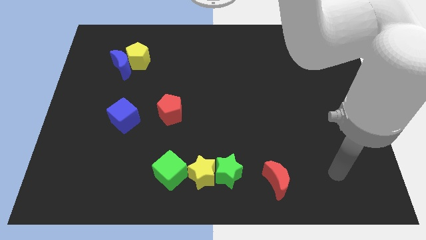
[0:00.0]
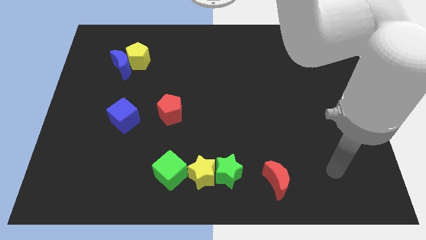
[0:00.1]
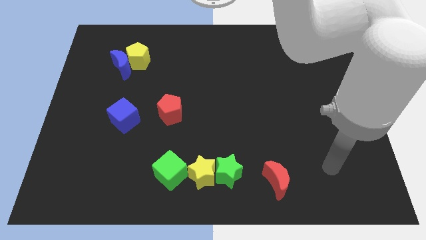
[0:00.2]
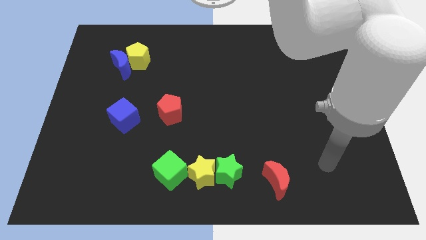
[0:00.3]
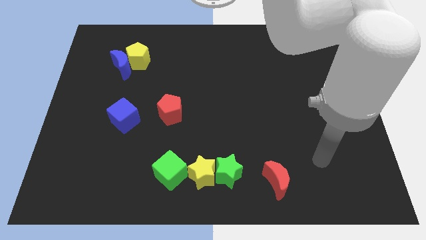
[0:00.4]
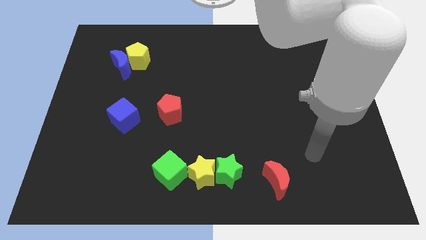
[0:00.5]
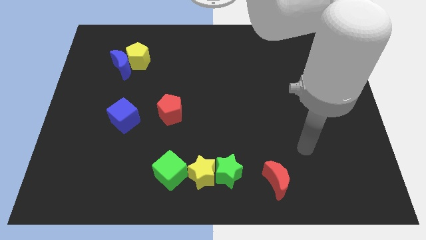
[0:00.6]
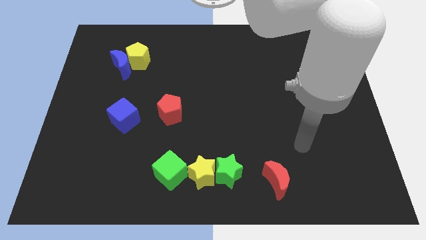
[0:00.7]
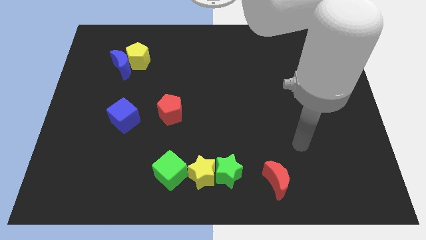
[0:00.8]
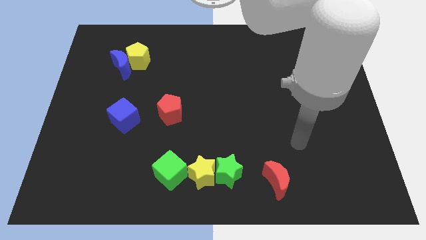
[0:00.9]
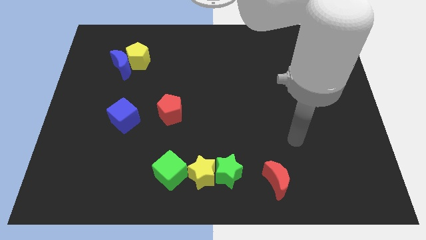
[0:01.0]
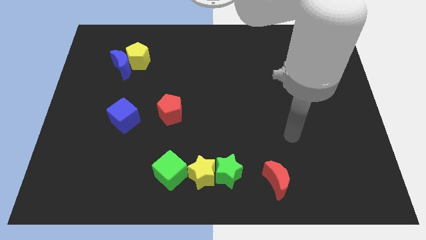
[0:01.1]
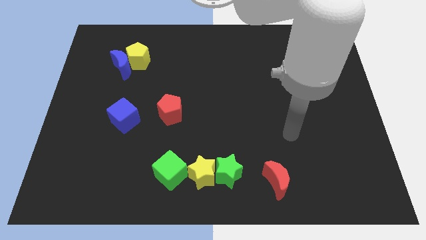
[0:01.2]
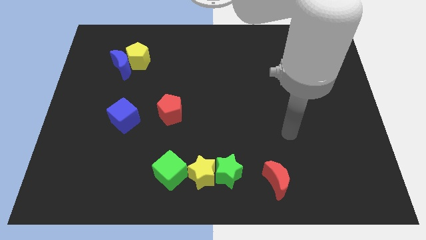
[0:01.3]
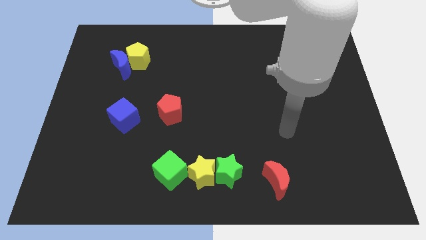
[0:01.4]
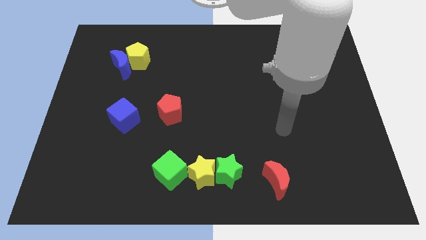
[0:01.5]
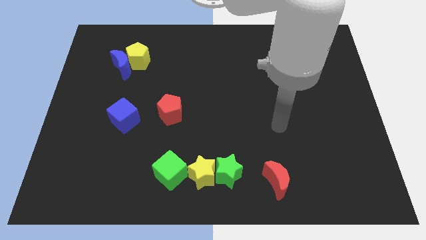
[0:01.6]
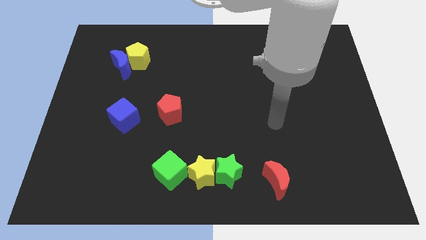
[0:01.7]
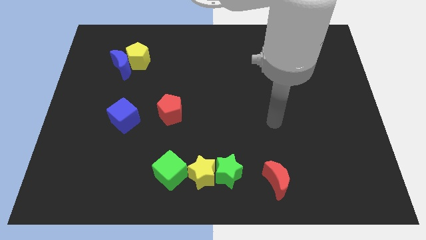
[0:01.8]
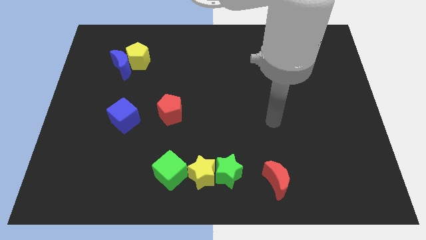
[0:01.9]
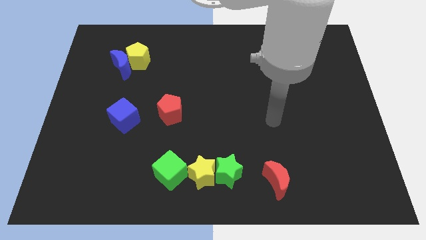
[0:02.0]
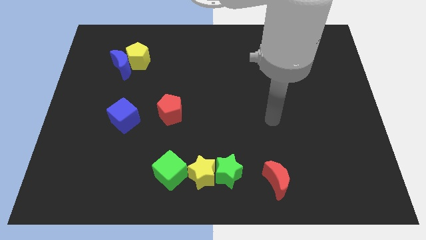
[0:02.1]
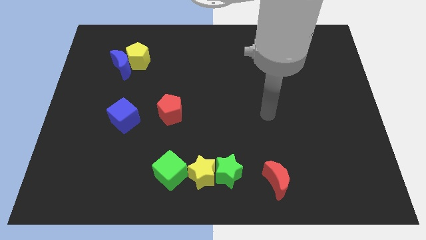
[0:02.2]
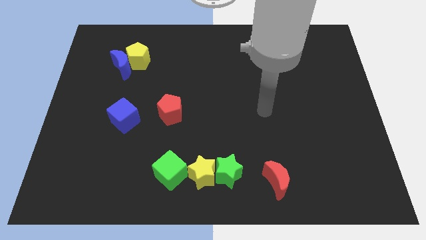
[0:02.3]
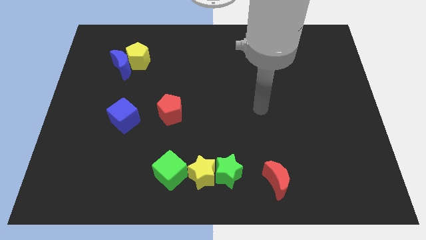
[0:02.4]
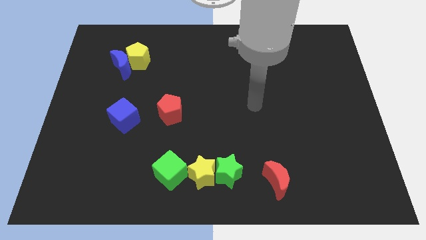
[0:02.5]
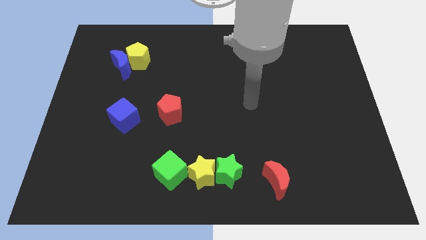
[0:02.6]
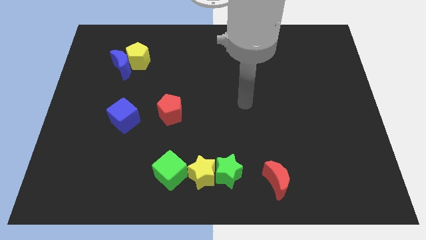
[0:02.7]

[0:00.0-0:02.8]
point the arm at the center of the board

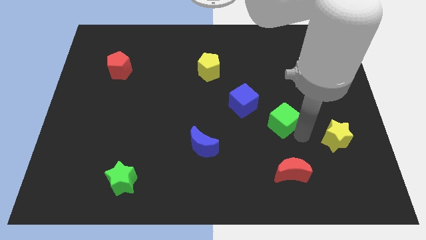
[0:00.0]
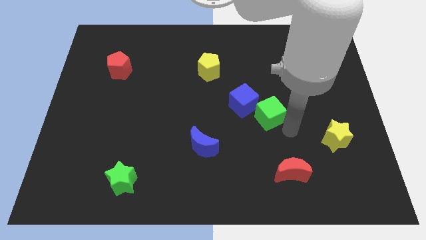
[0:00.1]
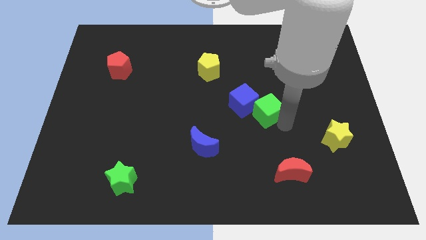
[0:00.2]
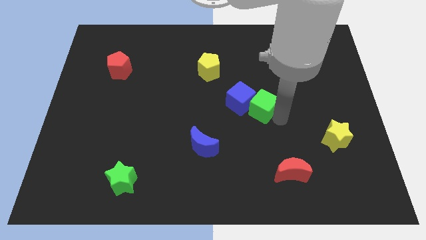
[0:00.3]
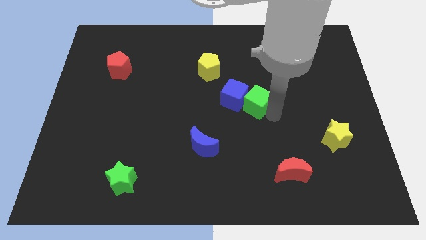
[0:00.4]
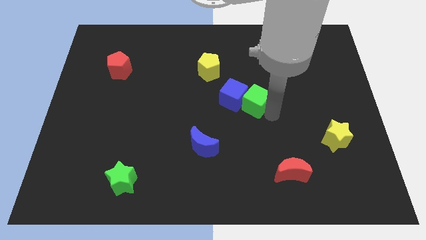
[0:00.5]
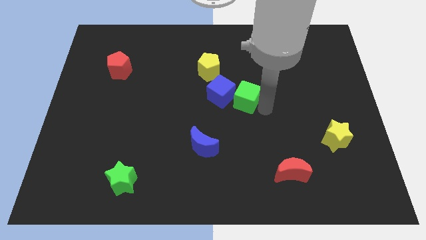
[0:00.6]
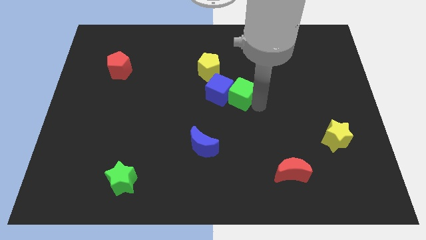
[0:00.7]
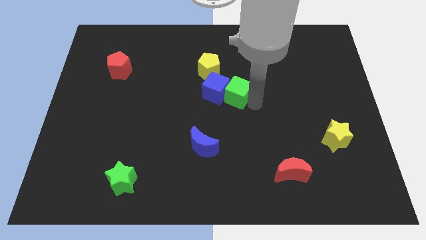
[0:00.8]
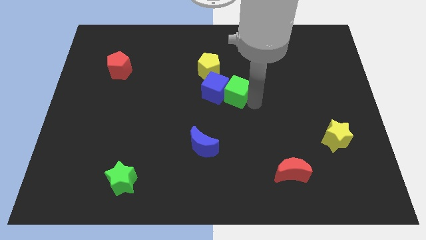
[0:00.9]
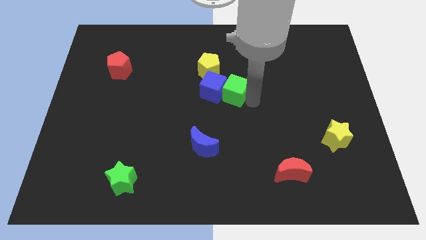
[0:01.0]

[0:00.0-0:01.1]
push green cube along with blue cube towards yellow pentagon

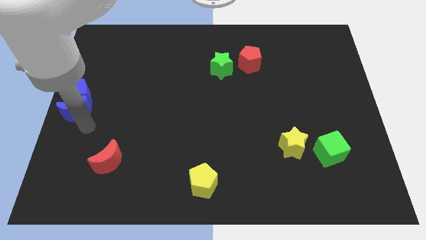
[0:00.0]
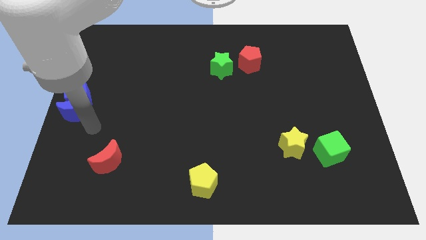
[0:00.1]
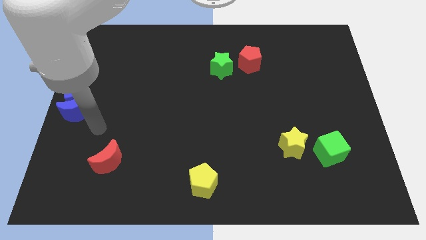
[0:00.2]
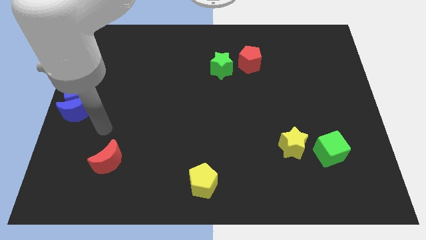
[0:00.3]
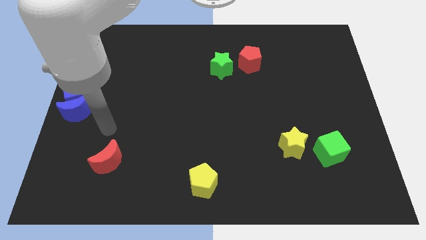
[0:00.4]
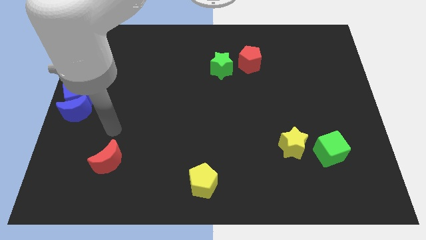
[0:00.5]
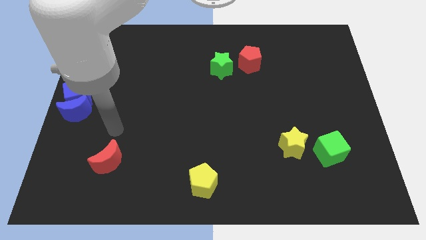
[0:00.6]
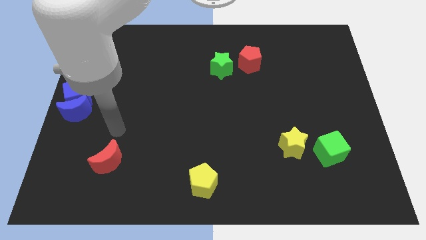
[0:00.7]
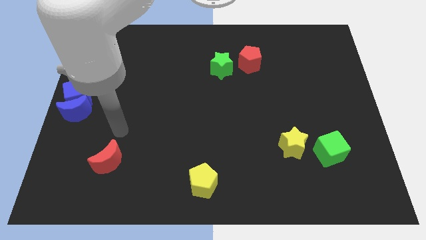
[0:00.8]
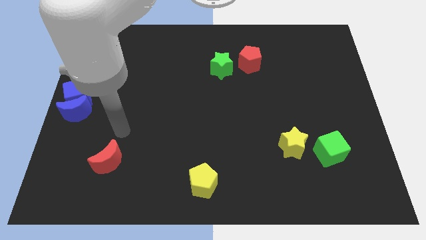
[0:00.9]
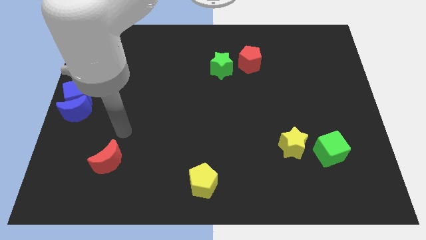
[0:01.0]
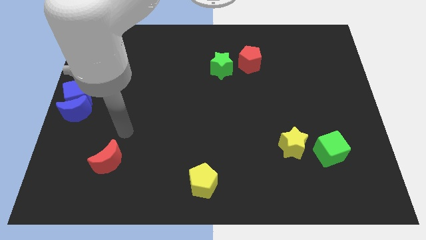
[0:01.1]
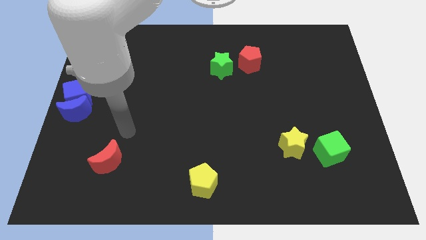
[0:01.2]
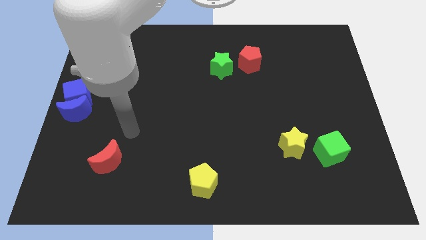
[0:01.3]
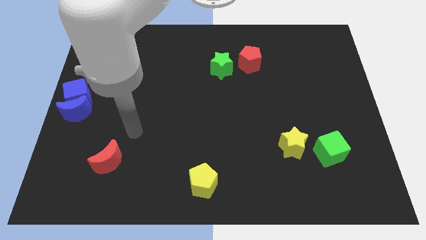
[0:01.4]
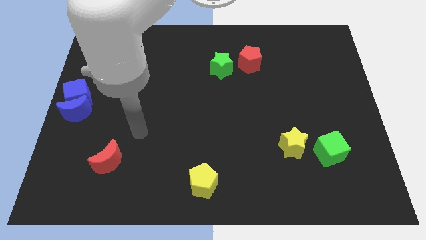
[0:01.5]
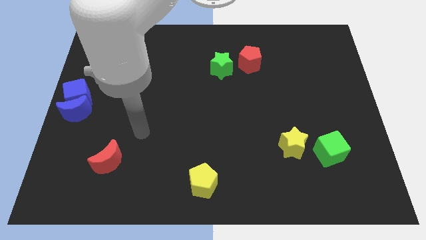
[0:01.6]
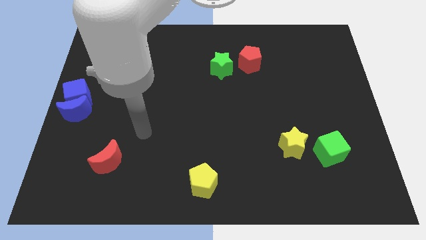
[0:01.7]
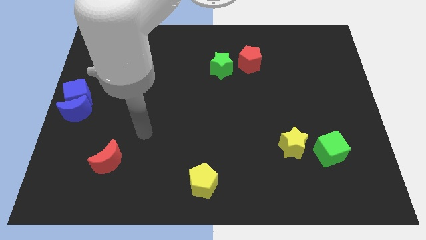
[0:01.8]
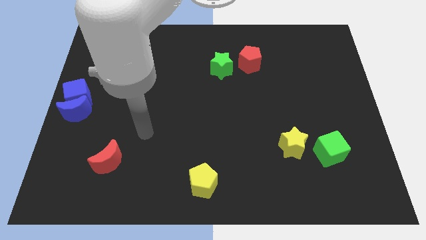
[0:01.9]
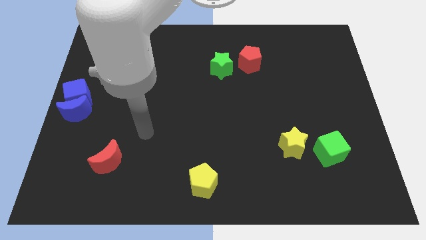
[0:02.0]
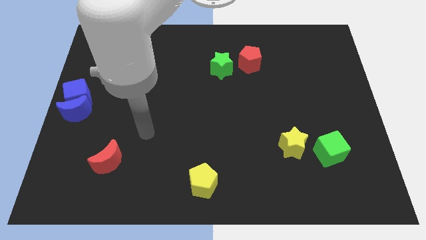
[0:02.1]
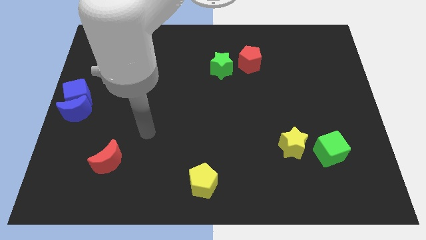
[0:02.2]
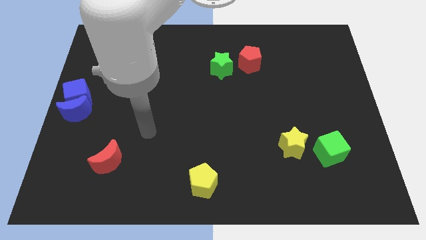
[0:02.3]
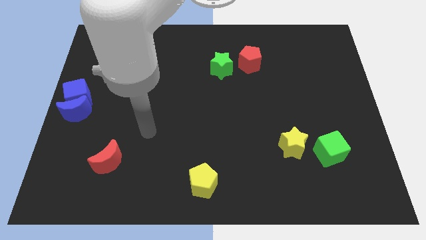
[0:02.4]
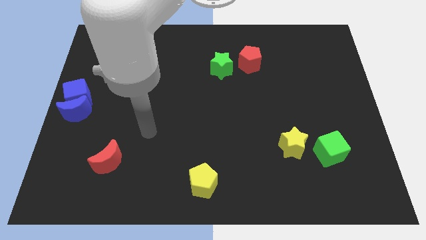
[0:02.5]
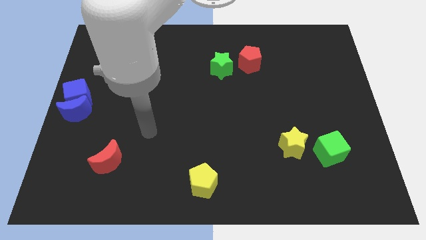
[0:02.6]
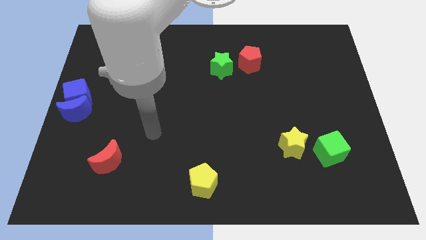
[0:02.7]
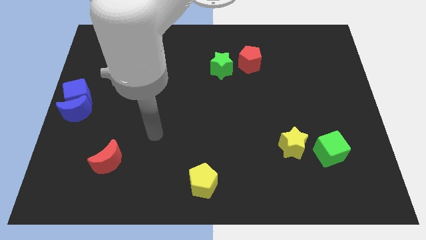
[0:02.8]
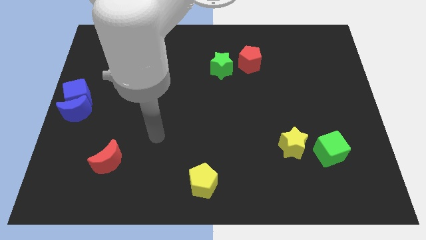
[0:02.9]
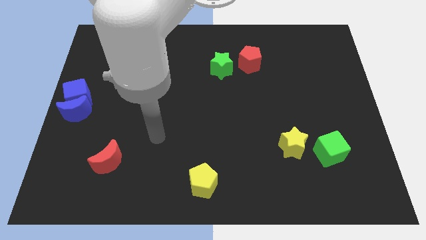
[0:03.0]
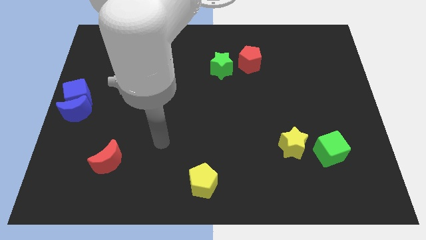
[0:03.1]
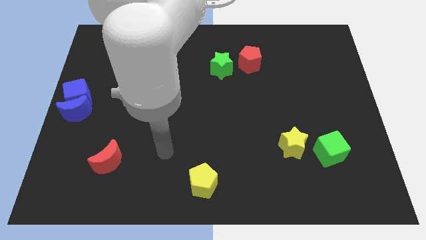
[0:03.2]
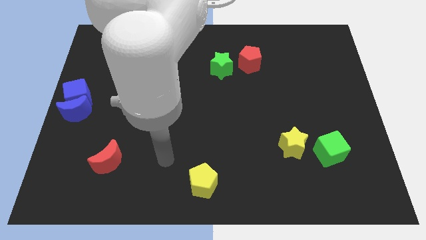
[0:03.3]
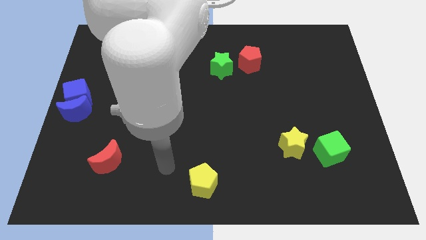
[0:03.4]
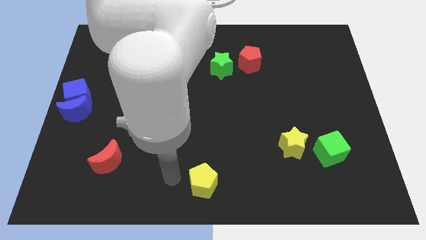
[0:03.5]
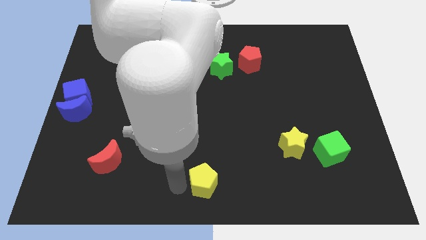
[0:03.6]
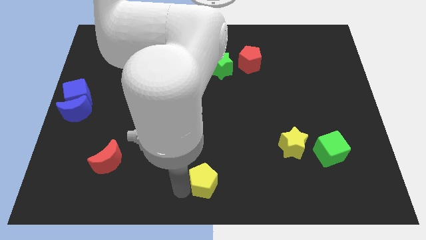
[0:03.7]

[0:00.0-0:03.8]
move your arm left to the yellow pentagon

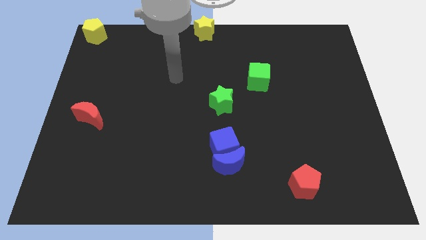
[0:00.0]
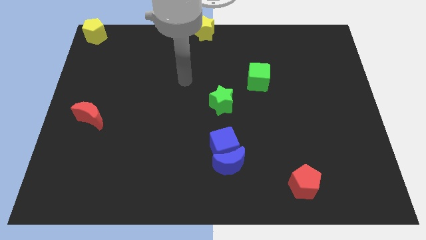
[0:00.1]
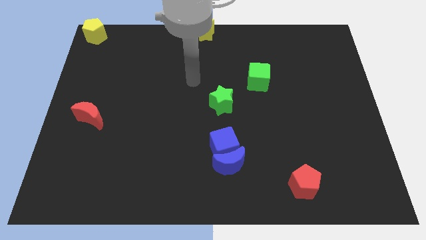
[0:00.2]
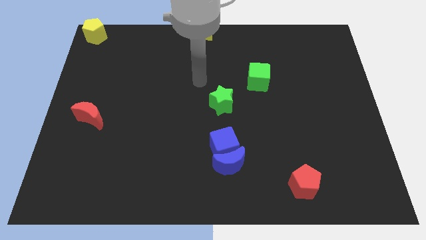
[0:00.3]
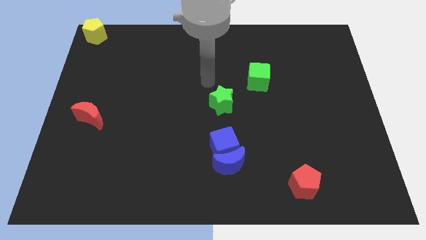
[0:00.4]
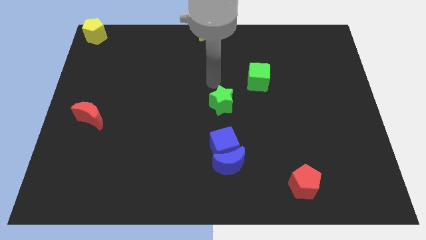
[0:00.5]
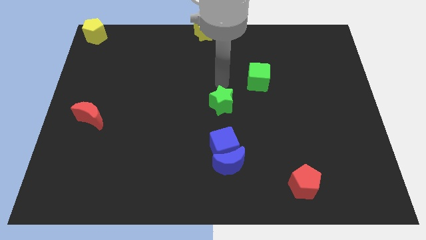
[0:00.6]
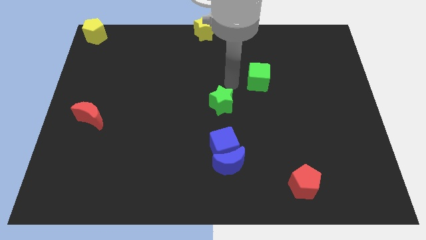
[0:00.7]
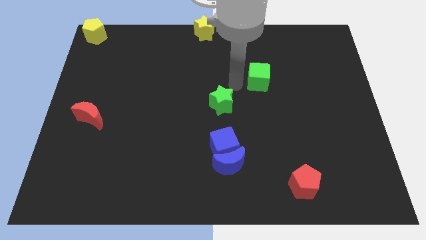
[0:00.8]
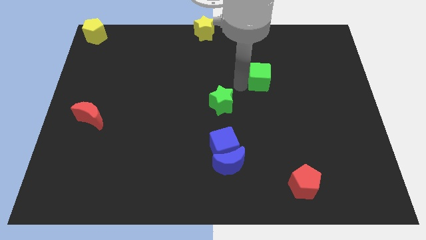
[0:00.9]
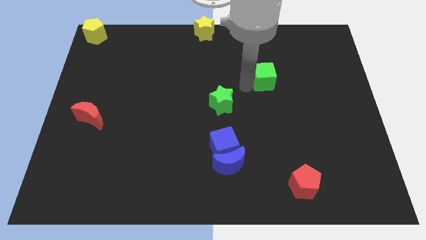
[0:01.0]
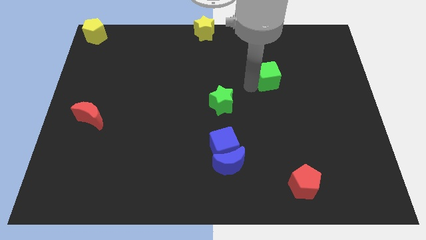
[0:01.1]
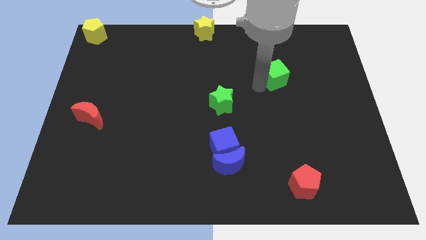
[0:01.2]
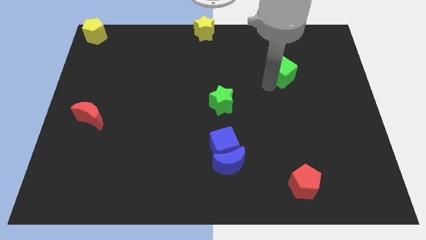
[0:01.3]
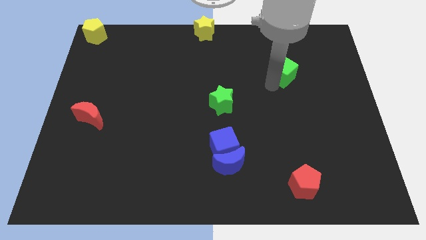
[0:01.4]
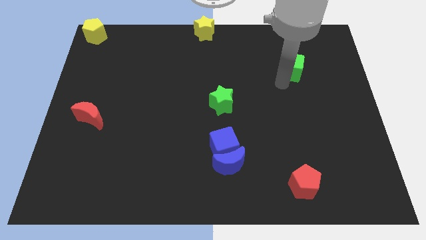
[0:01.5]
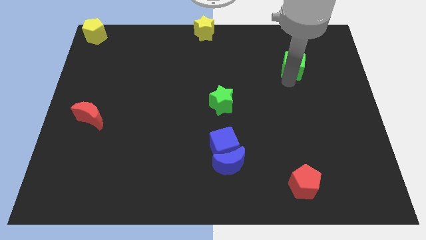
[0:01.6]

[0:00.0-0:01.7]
move the green cube to the right
